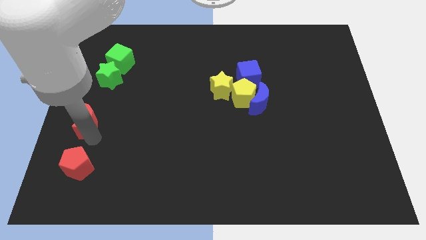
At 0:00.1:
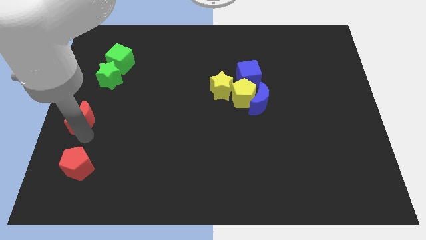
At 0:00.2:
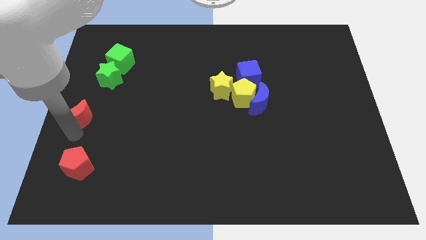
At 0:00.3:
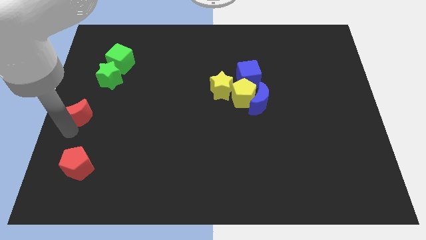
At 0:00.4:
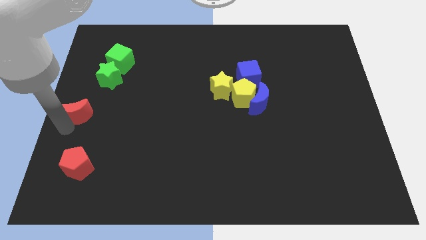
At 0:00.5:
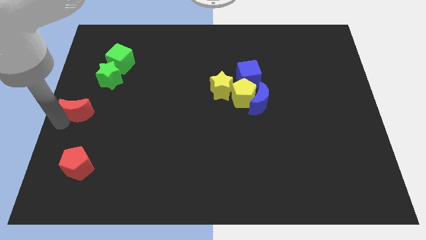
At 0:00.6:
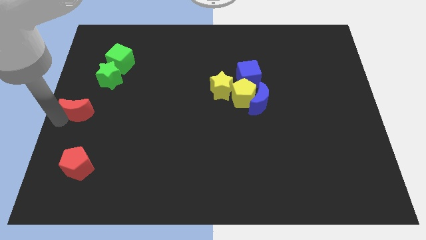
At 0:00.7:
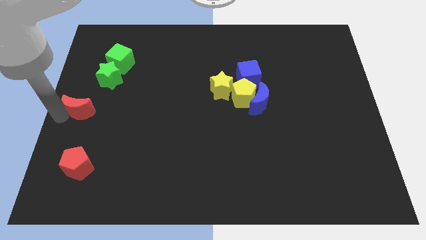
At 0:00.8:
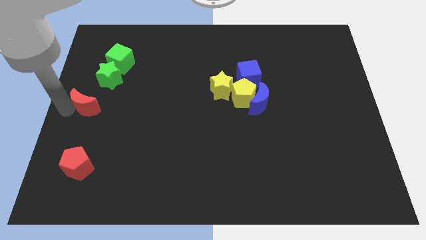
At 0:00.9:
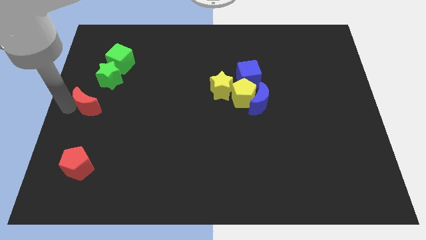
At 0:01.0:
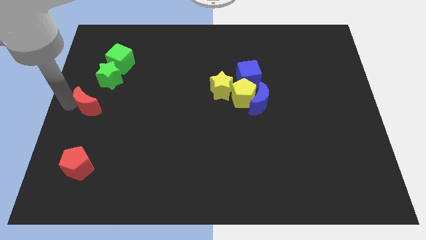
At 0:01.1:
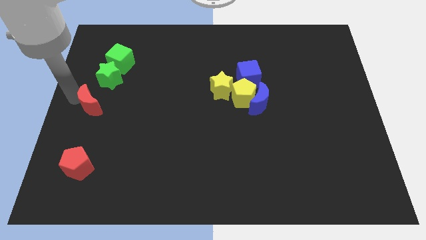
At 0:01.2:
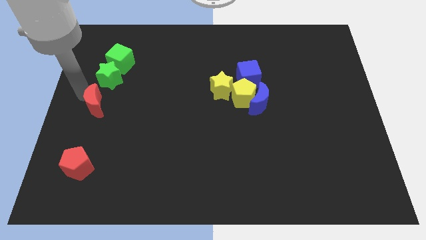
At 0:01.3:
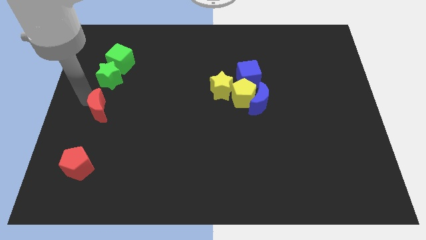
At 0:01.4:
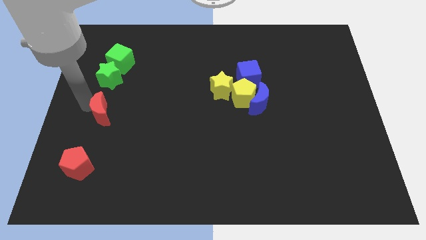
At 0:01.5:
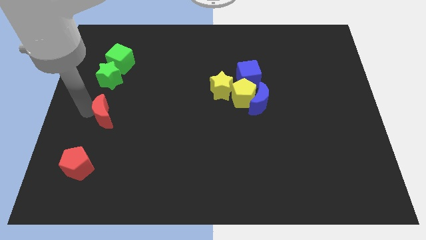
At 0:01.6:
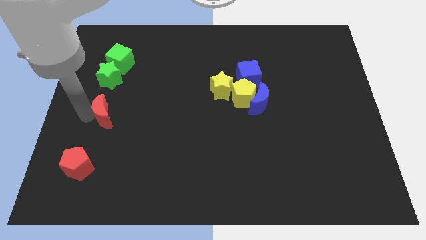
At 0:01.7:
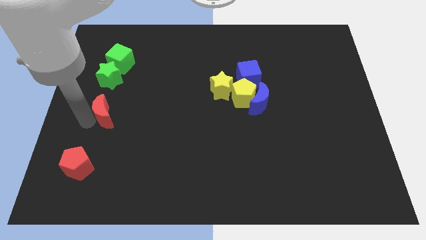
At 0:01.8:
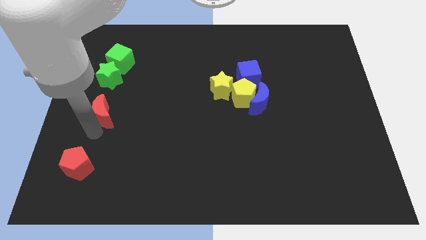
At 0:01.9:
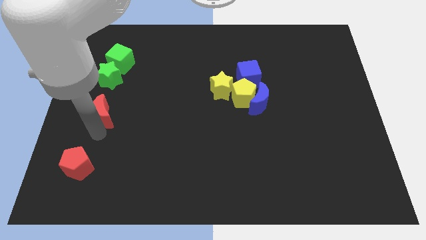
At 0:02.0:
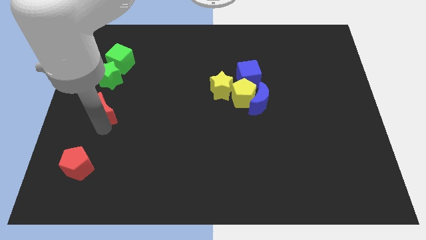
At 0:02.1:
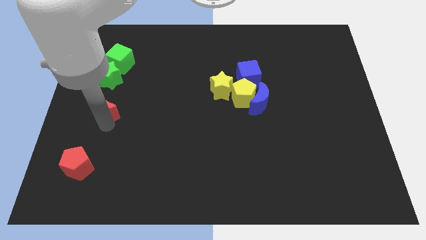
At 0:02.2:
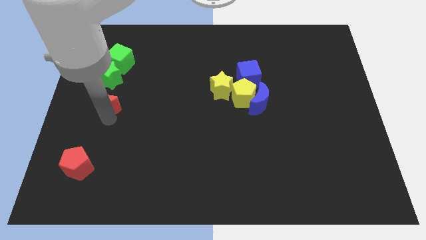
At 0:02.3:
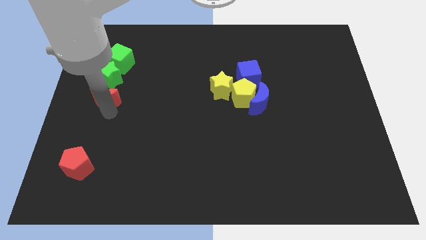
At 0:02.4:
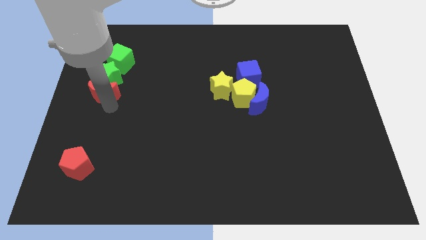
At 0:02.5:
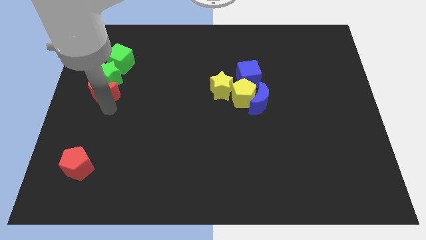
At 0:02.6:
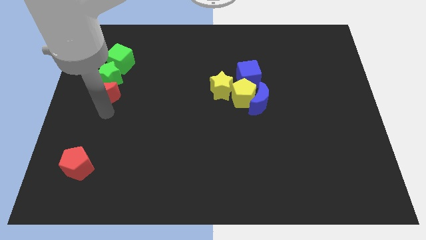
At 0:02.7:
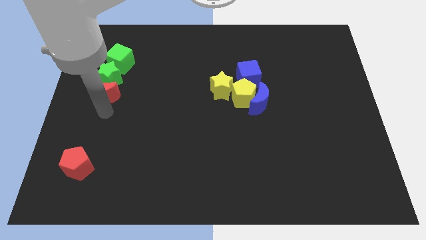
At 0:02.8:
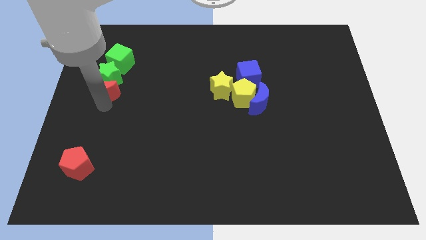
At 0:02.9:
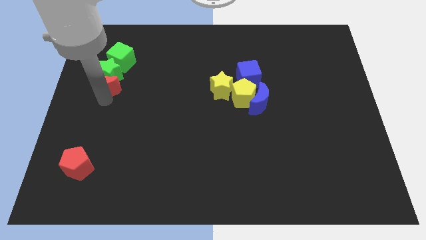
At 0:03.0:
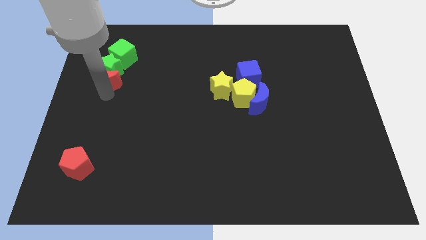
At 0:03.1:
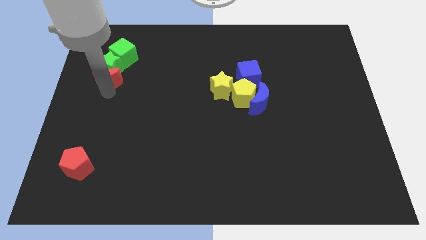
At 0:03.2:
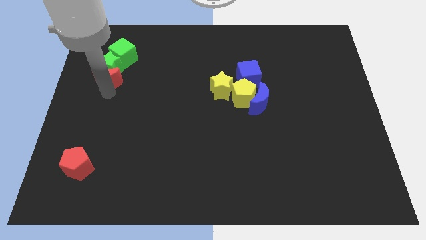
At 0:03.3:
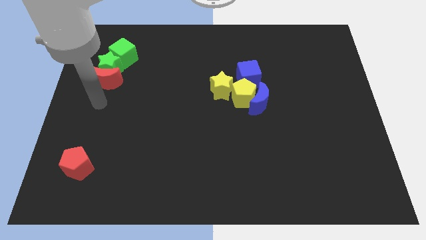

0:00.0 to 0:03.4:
push the red moon into the green star

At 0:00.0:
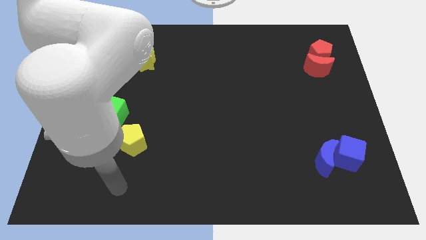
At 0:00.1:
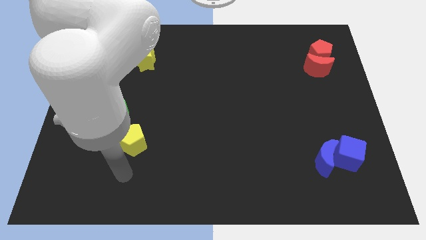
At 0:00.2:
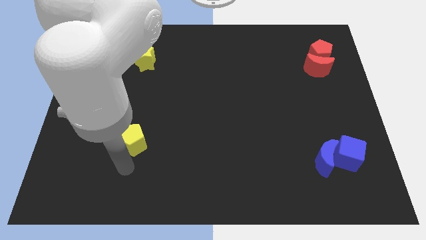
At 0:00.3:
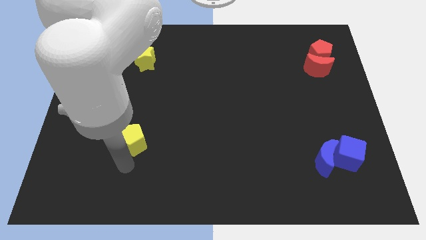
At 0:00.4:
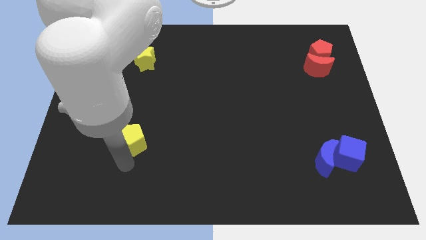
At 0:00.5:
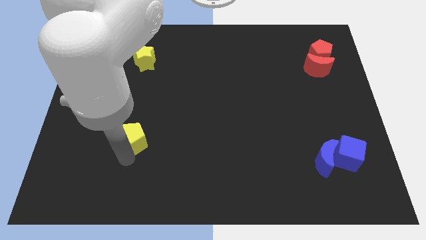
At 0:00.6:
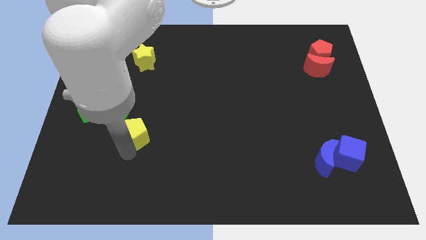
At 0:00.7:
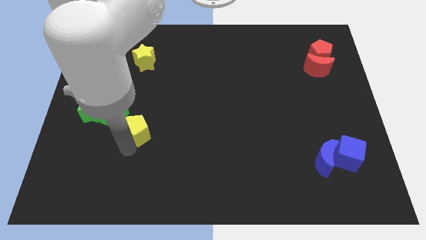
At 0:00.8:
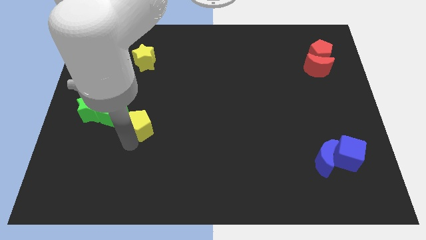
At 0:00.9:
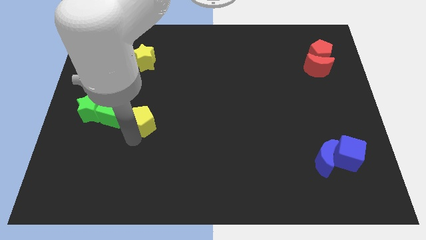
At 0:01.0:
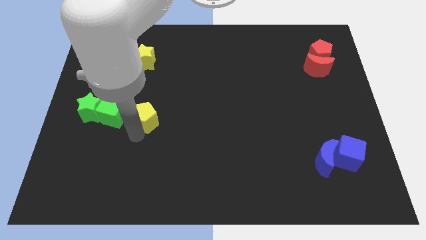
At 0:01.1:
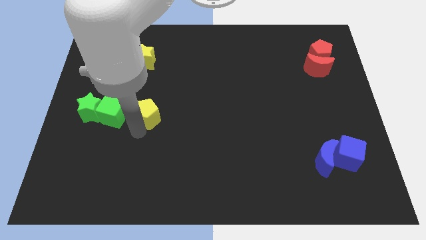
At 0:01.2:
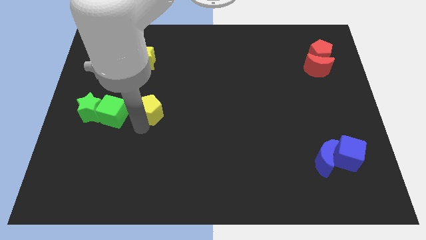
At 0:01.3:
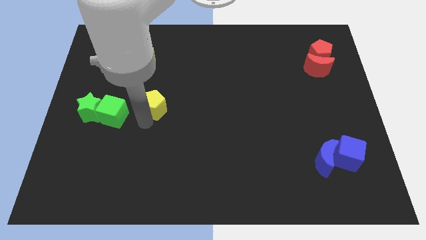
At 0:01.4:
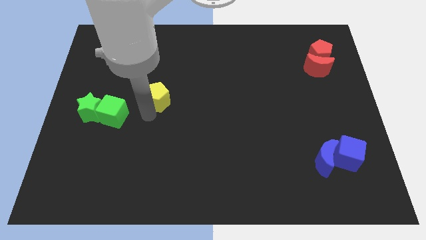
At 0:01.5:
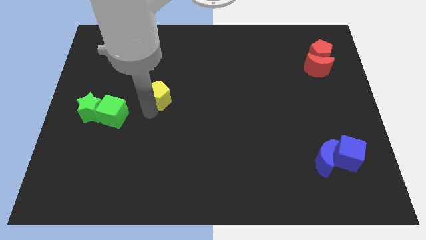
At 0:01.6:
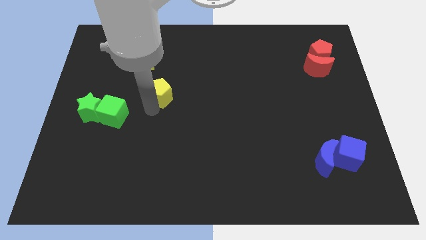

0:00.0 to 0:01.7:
drag the yellow pentagon upwards

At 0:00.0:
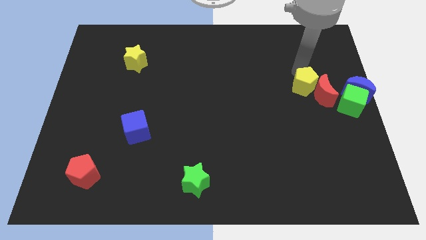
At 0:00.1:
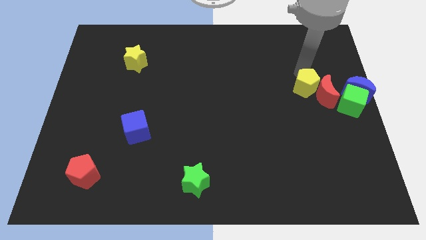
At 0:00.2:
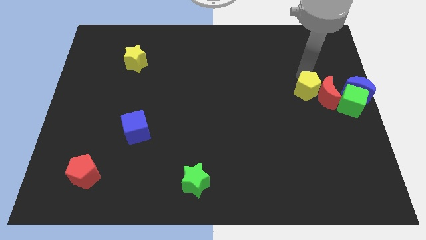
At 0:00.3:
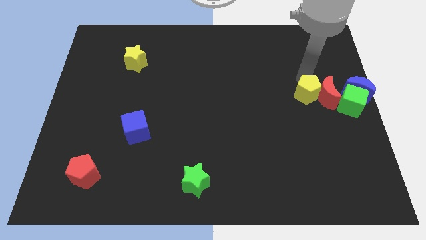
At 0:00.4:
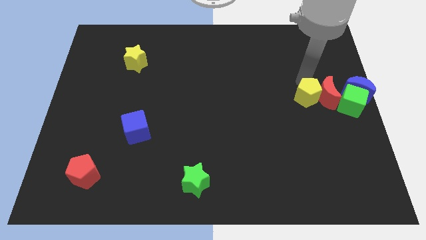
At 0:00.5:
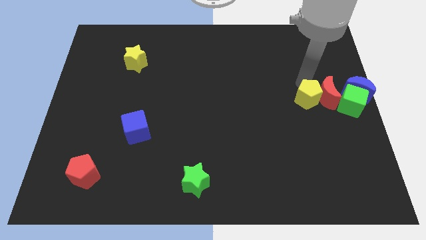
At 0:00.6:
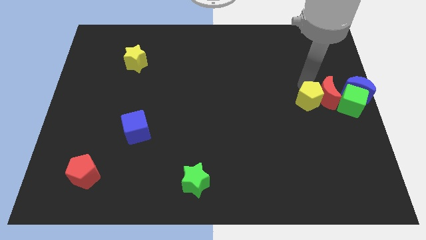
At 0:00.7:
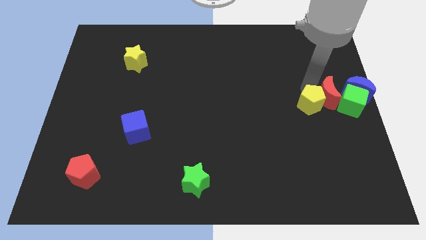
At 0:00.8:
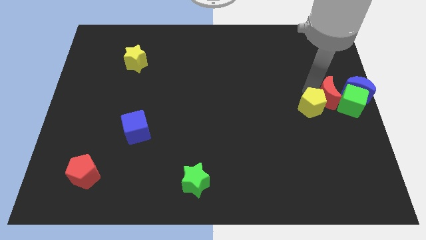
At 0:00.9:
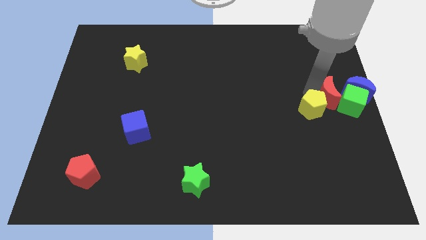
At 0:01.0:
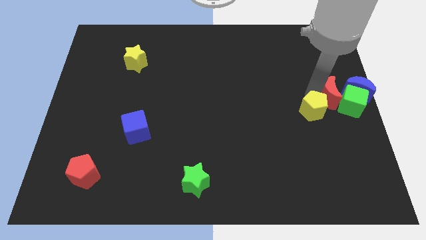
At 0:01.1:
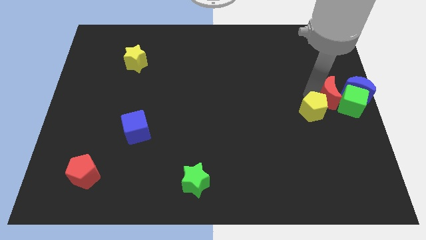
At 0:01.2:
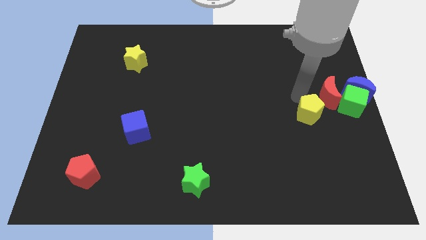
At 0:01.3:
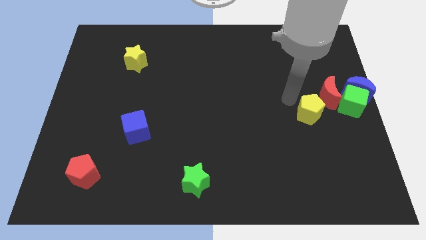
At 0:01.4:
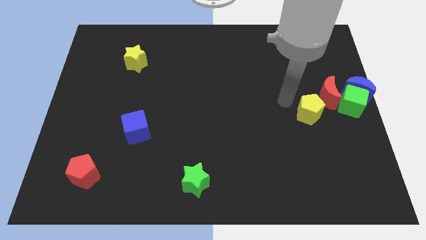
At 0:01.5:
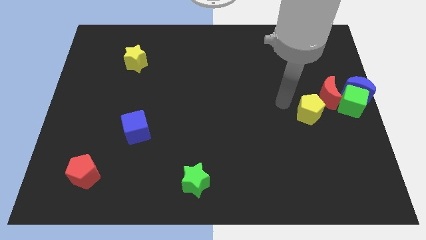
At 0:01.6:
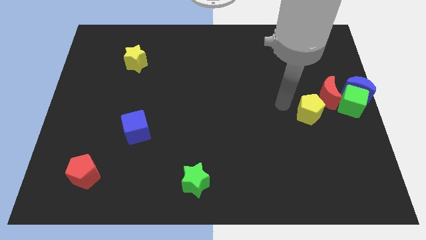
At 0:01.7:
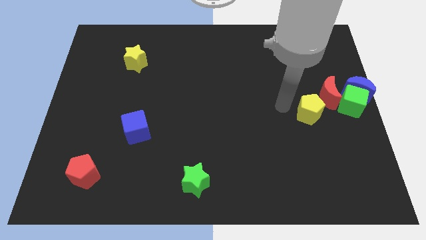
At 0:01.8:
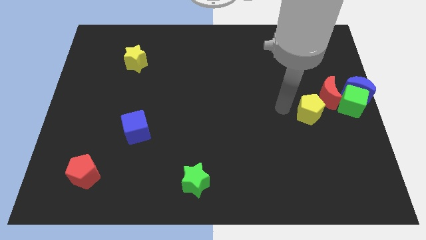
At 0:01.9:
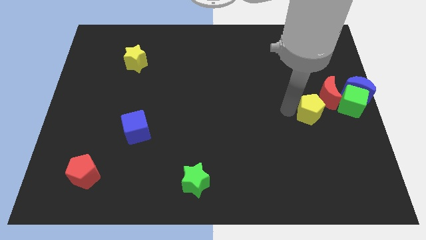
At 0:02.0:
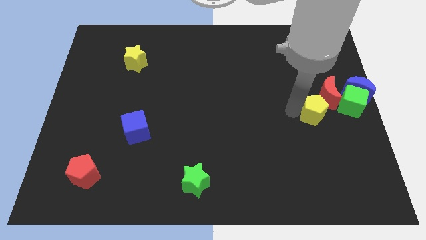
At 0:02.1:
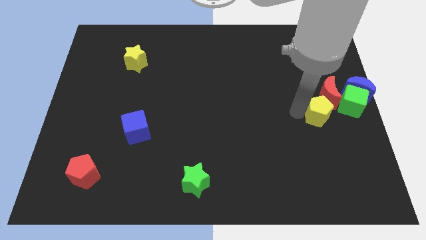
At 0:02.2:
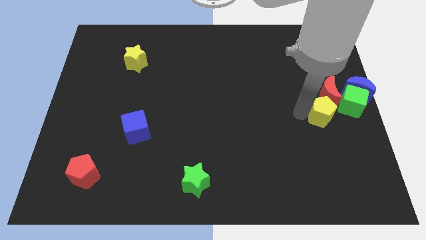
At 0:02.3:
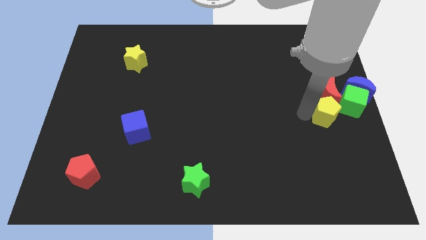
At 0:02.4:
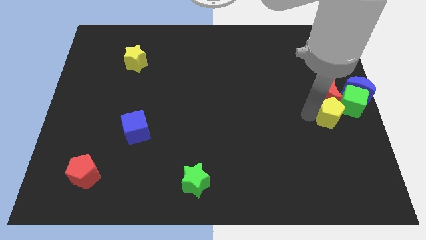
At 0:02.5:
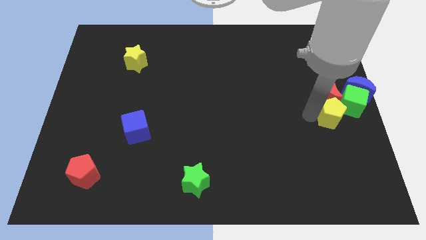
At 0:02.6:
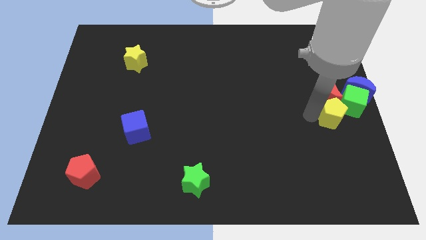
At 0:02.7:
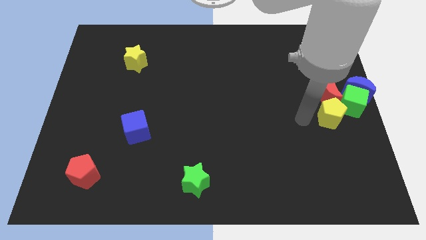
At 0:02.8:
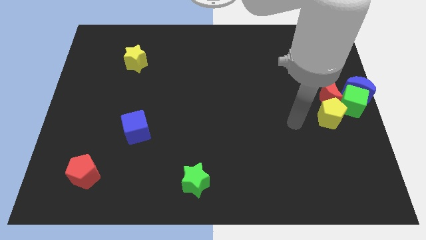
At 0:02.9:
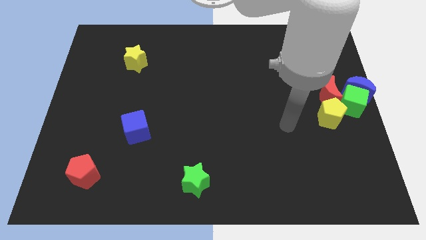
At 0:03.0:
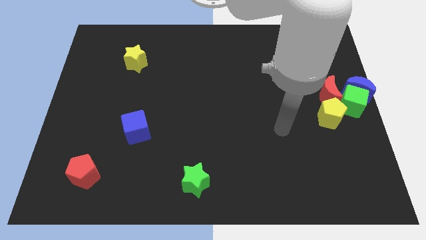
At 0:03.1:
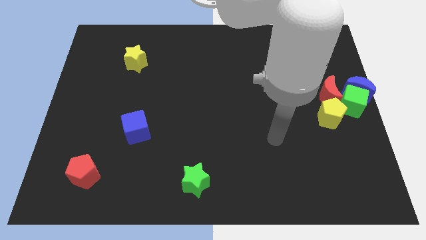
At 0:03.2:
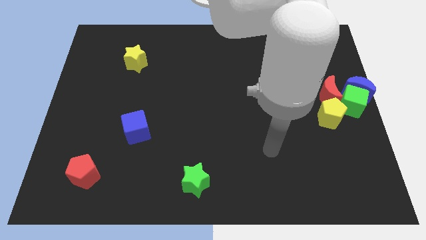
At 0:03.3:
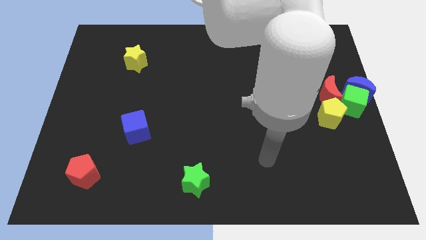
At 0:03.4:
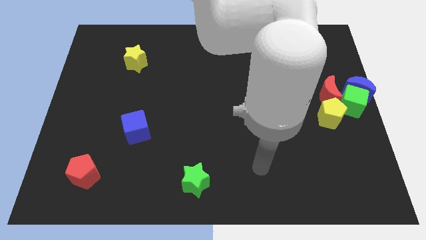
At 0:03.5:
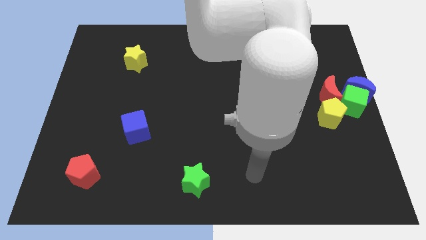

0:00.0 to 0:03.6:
move the yellow pentagon to the bottom of the red crescent

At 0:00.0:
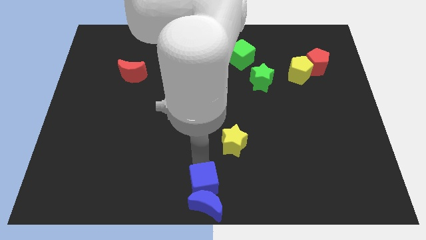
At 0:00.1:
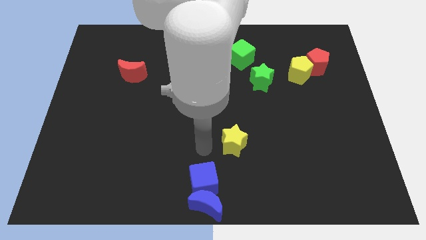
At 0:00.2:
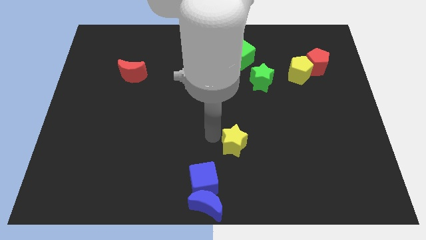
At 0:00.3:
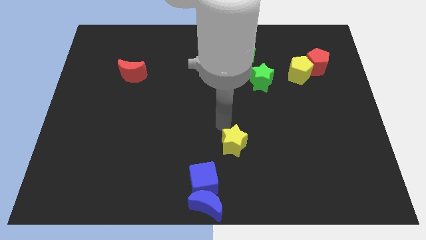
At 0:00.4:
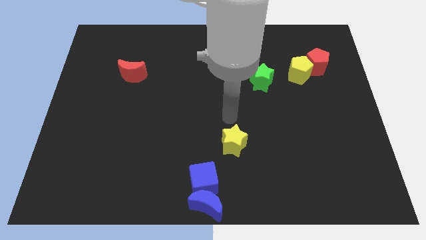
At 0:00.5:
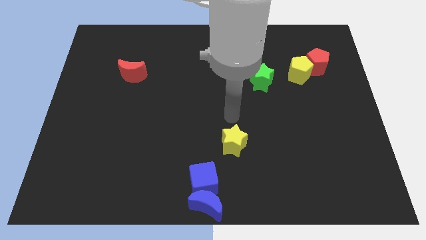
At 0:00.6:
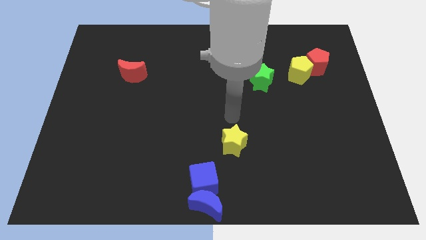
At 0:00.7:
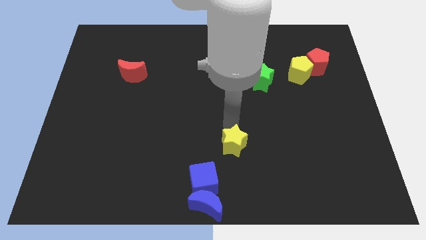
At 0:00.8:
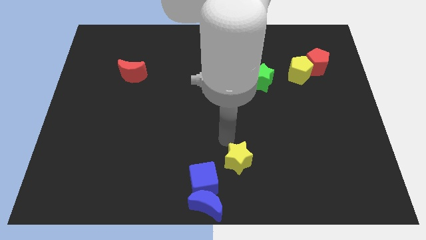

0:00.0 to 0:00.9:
tap the yellow star
